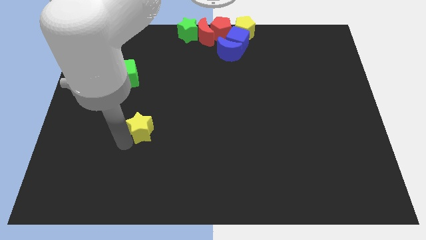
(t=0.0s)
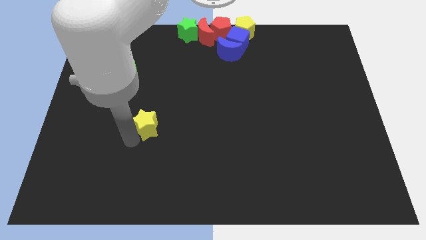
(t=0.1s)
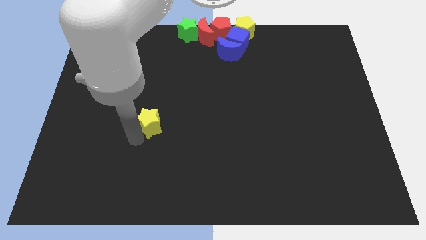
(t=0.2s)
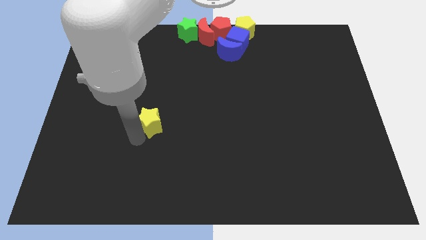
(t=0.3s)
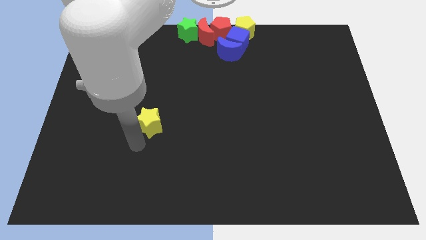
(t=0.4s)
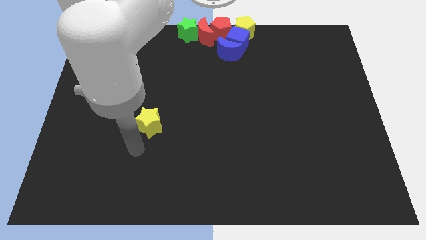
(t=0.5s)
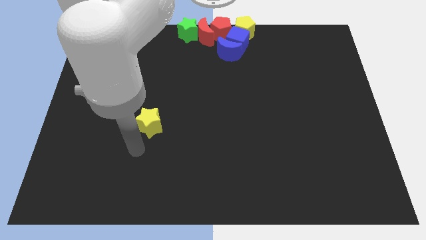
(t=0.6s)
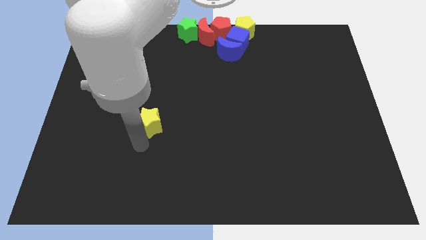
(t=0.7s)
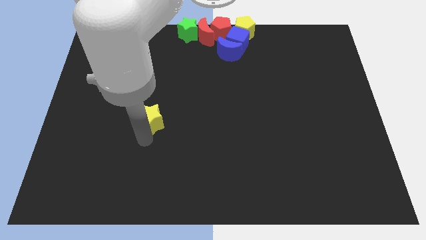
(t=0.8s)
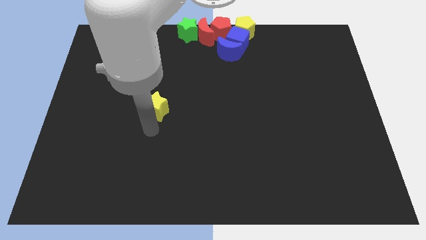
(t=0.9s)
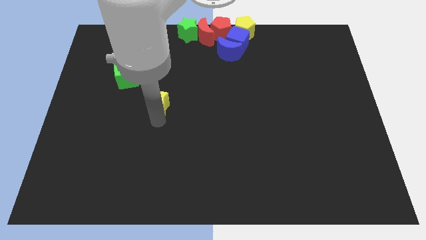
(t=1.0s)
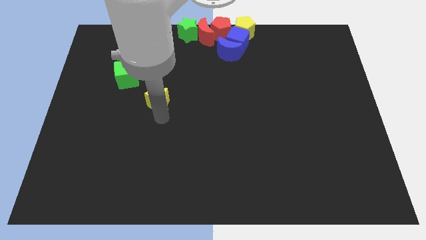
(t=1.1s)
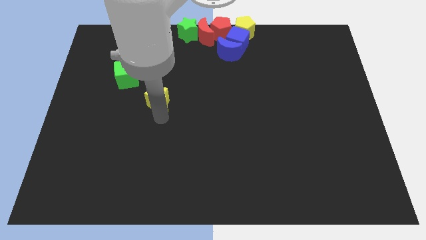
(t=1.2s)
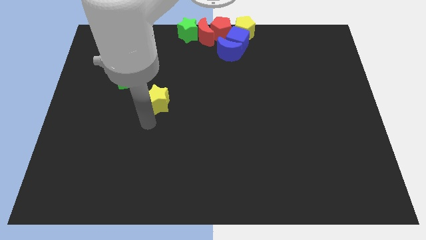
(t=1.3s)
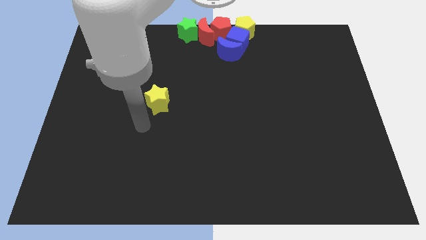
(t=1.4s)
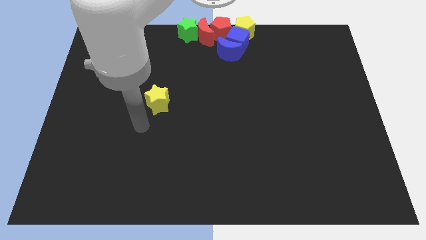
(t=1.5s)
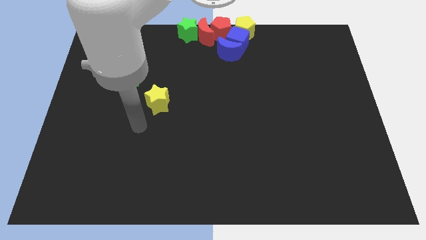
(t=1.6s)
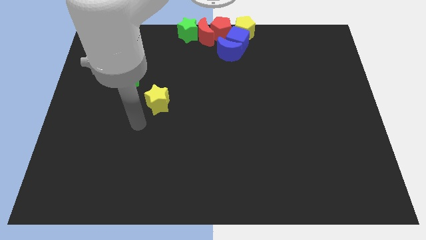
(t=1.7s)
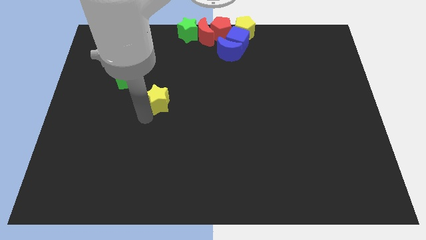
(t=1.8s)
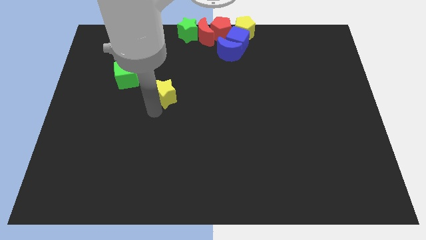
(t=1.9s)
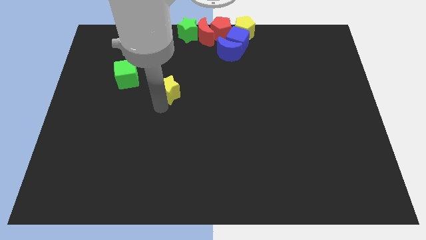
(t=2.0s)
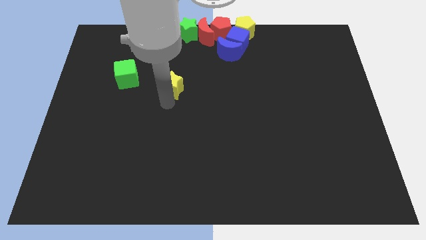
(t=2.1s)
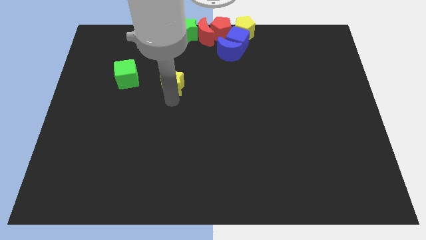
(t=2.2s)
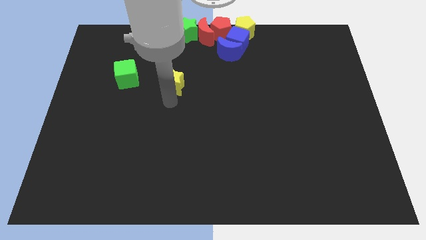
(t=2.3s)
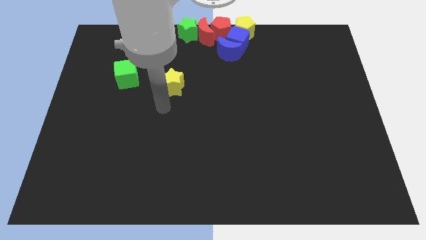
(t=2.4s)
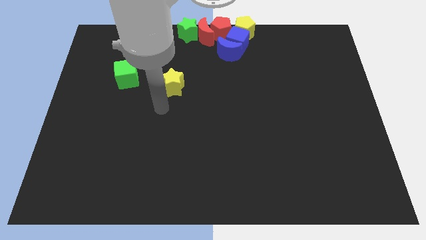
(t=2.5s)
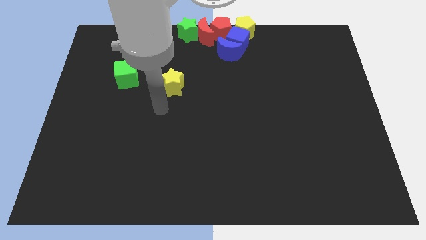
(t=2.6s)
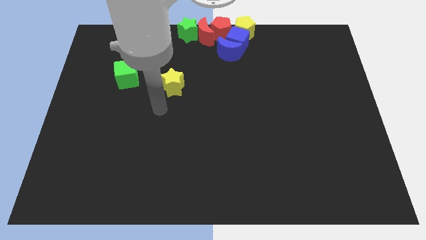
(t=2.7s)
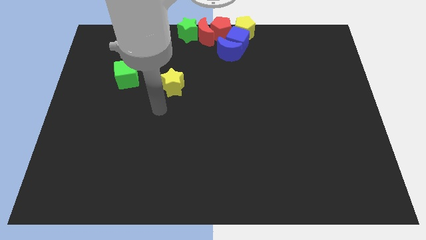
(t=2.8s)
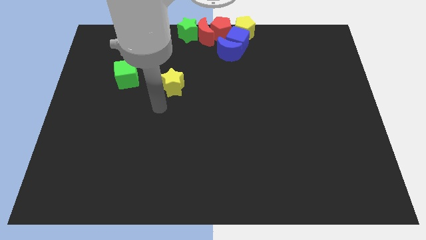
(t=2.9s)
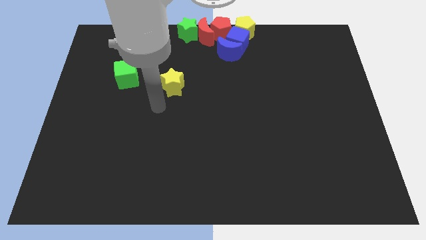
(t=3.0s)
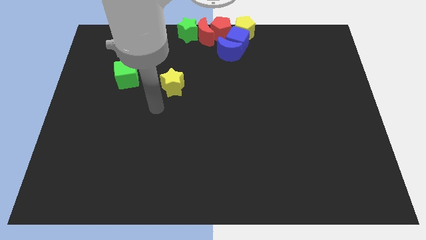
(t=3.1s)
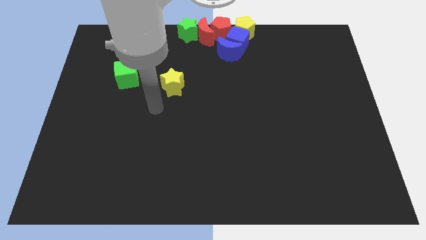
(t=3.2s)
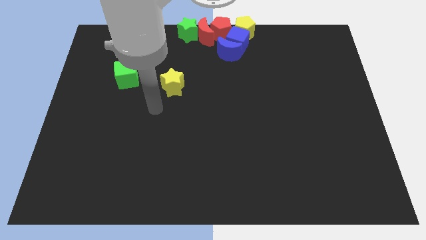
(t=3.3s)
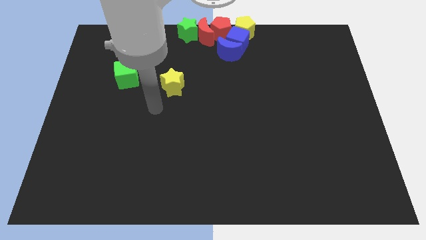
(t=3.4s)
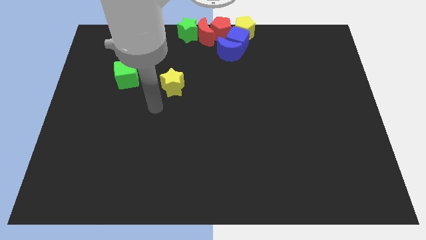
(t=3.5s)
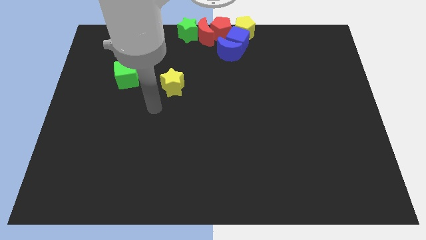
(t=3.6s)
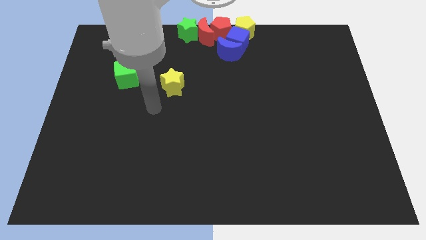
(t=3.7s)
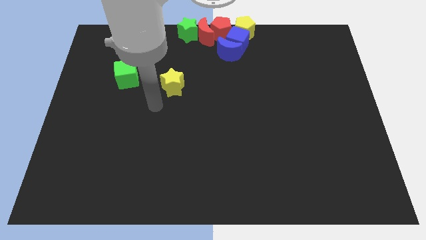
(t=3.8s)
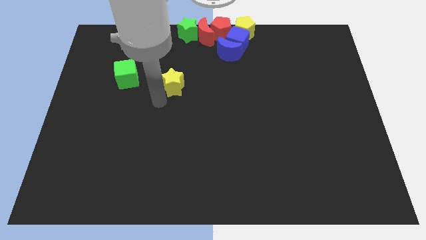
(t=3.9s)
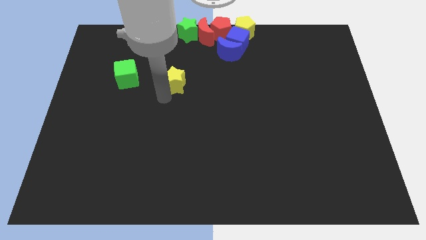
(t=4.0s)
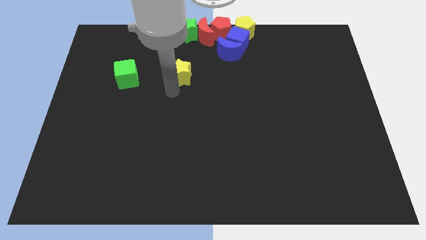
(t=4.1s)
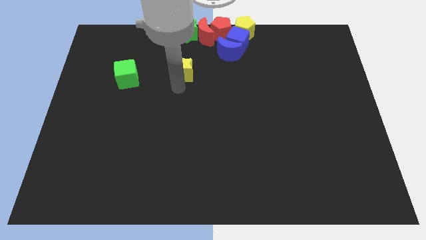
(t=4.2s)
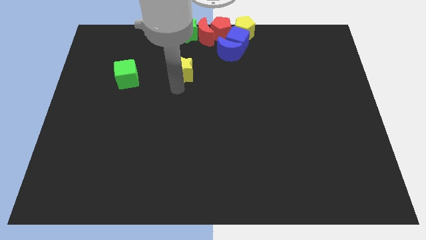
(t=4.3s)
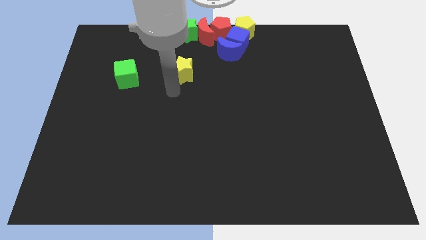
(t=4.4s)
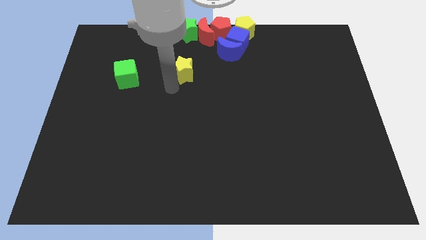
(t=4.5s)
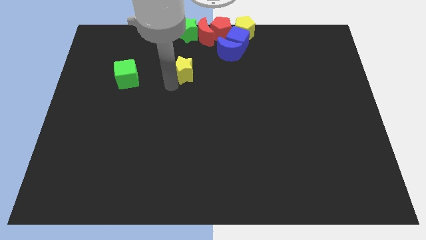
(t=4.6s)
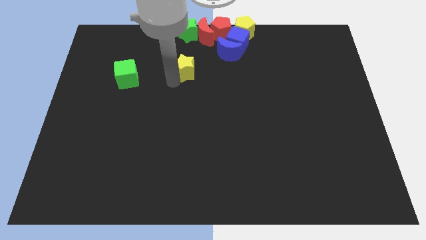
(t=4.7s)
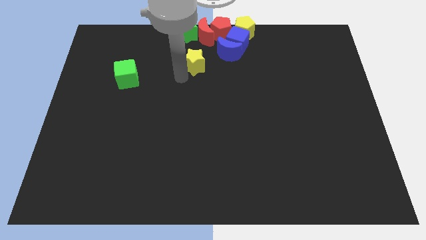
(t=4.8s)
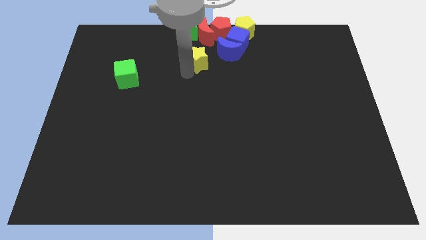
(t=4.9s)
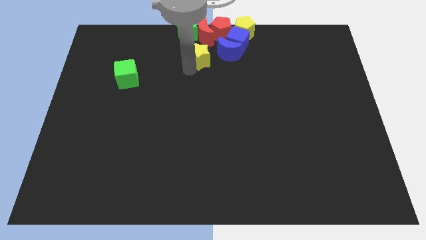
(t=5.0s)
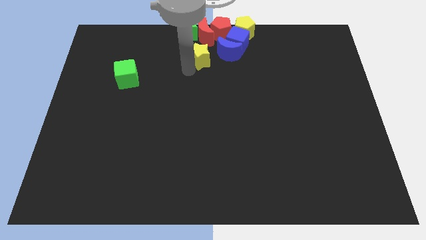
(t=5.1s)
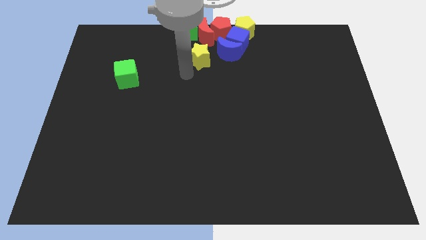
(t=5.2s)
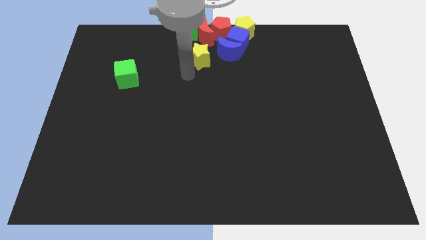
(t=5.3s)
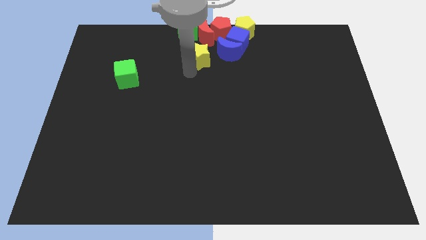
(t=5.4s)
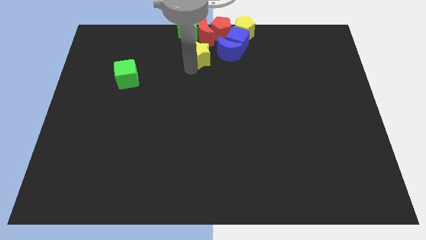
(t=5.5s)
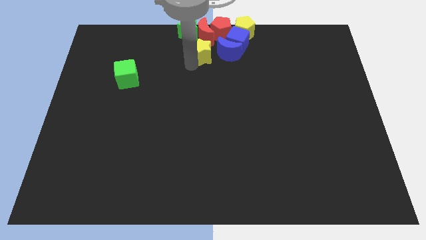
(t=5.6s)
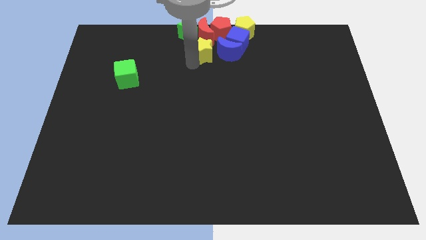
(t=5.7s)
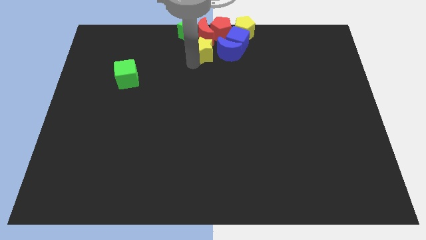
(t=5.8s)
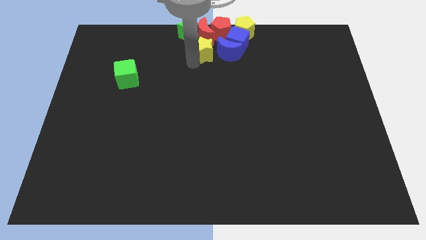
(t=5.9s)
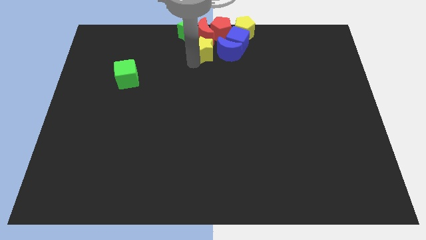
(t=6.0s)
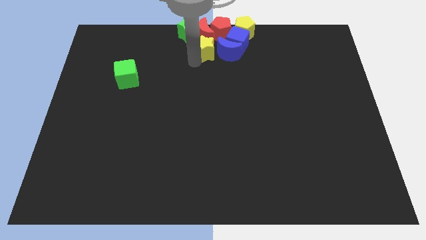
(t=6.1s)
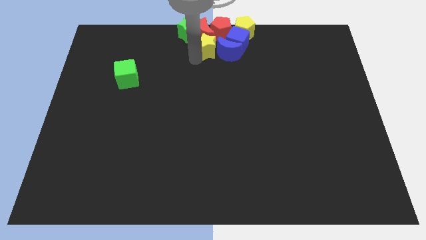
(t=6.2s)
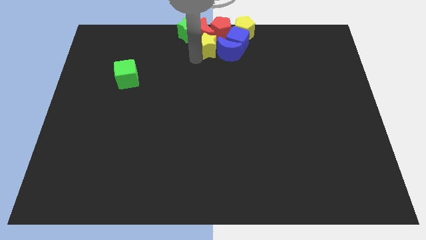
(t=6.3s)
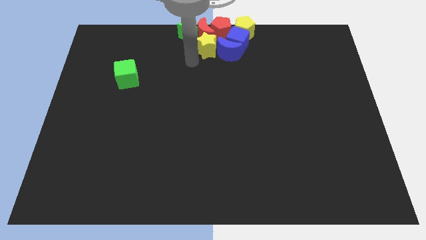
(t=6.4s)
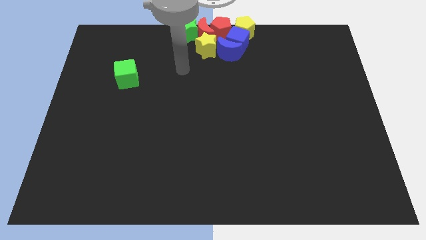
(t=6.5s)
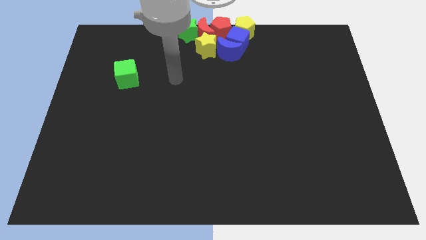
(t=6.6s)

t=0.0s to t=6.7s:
place the yellow star to the left side of the blue moon

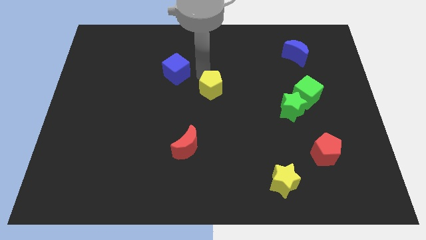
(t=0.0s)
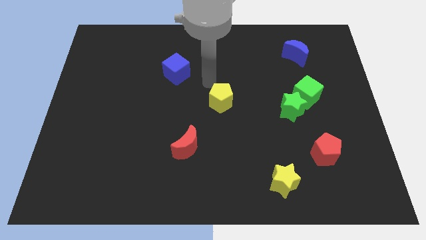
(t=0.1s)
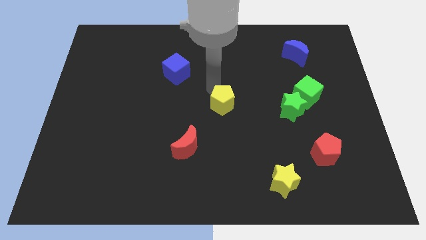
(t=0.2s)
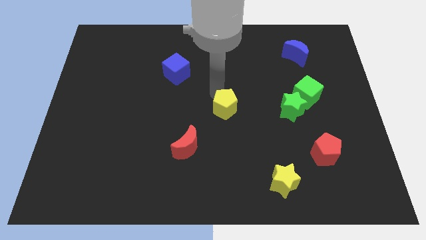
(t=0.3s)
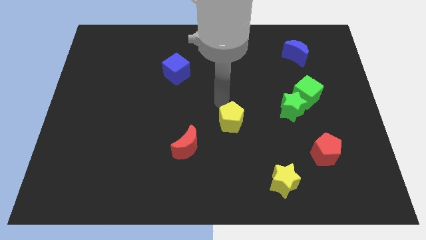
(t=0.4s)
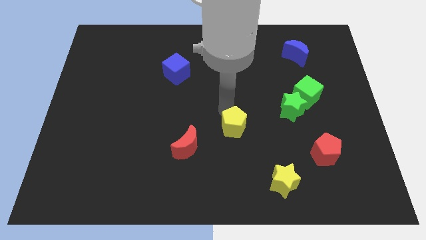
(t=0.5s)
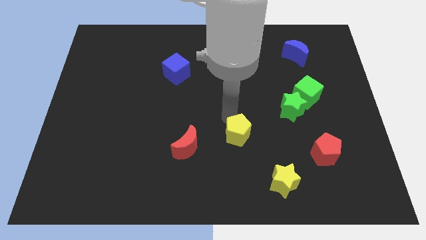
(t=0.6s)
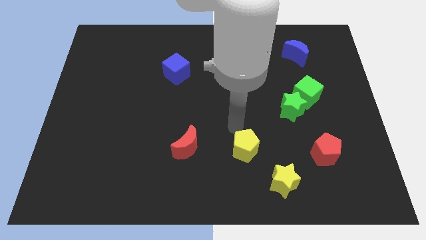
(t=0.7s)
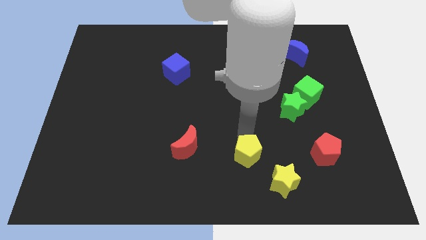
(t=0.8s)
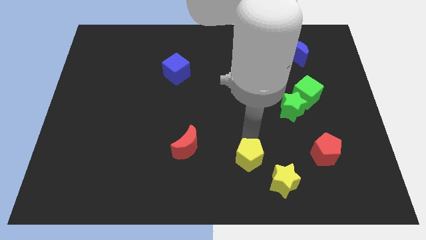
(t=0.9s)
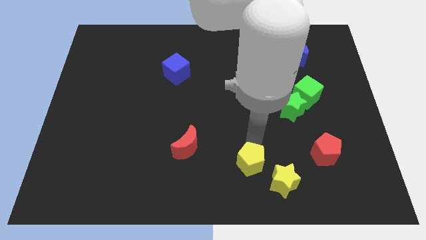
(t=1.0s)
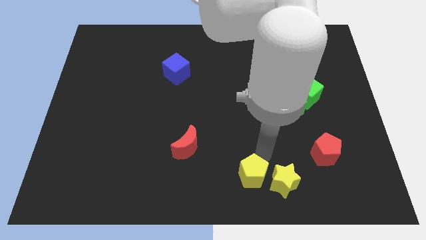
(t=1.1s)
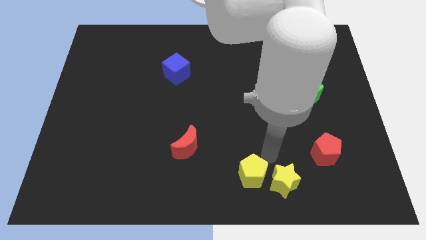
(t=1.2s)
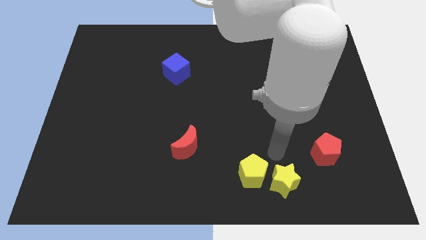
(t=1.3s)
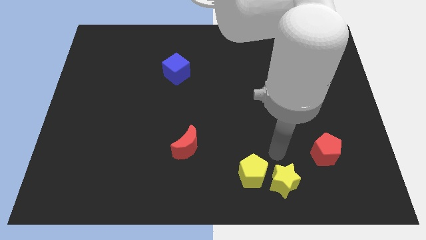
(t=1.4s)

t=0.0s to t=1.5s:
move the yellow pentagon to the left of the yellow star

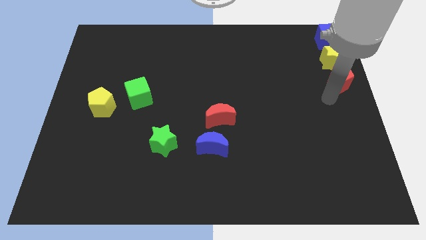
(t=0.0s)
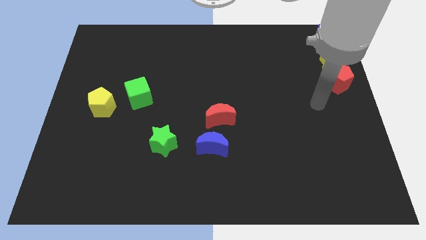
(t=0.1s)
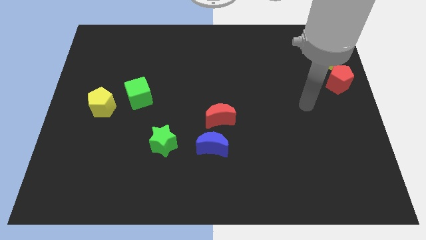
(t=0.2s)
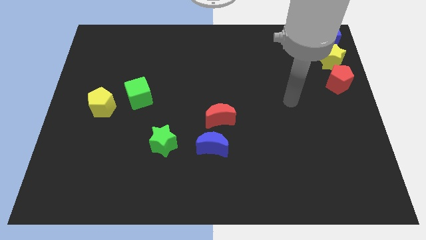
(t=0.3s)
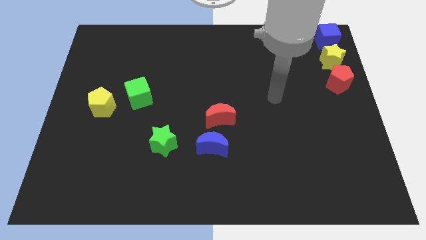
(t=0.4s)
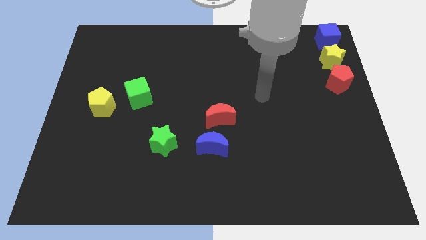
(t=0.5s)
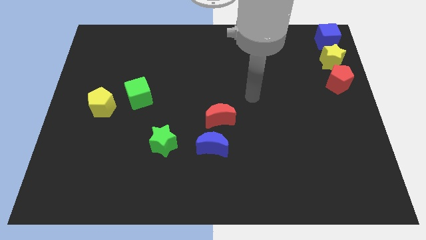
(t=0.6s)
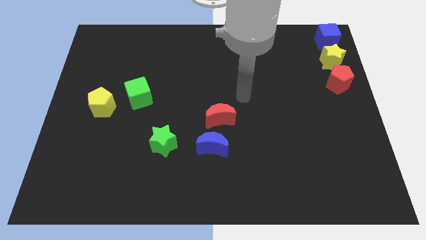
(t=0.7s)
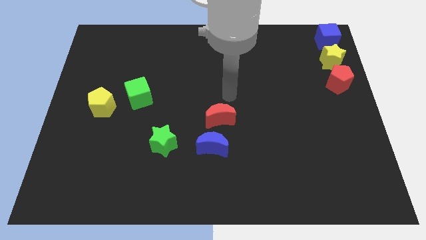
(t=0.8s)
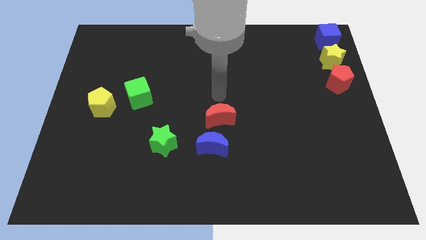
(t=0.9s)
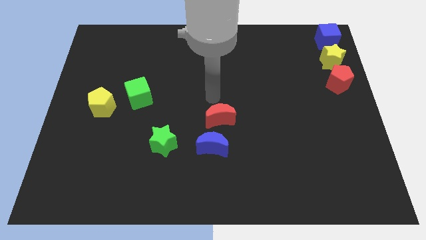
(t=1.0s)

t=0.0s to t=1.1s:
move your arm to the top of red crescent
